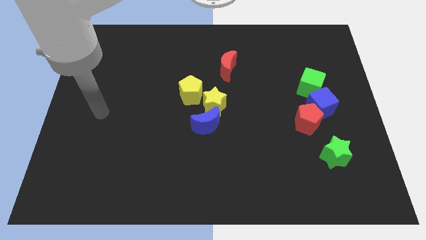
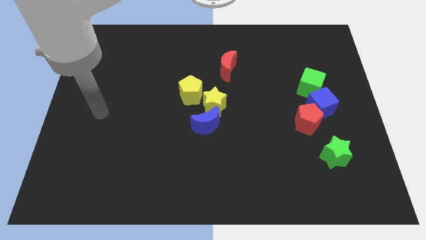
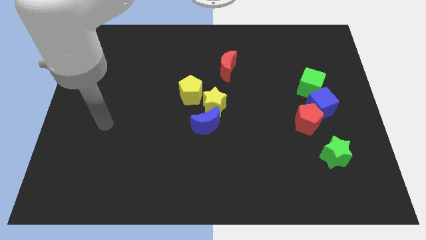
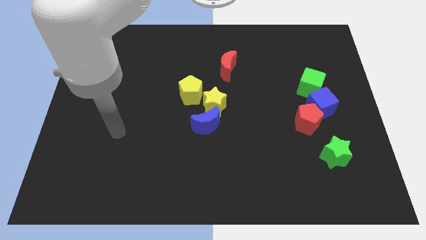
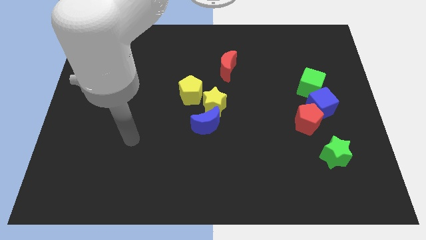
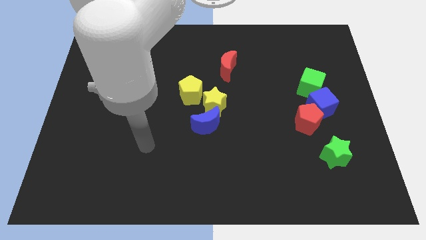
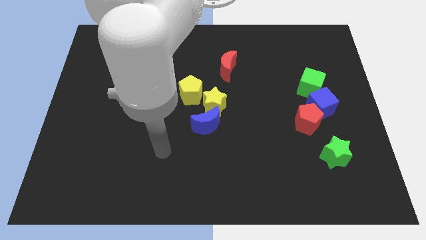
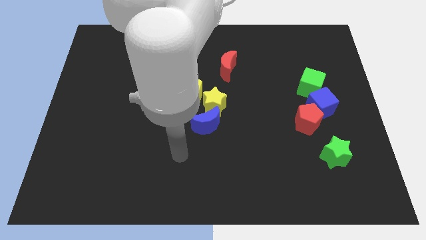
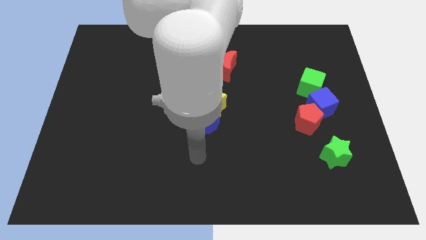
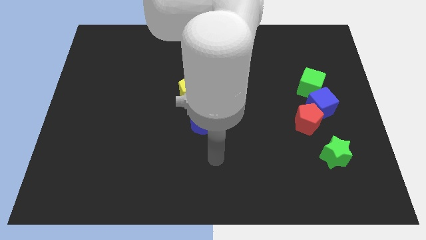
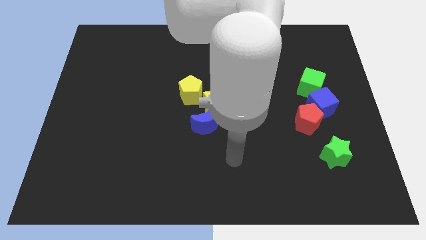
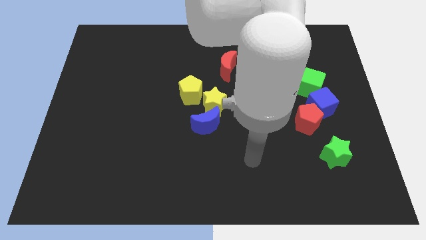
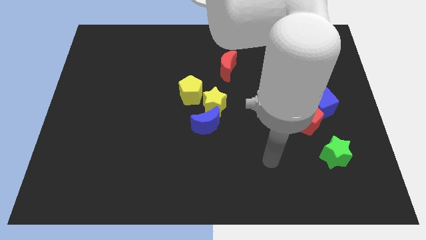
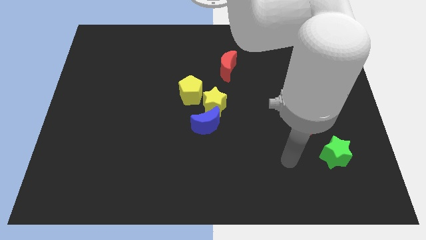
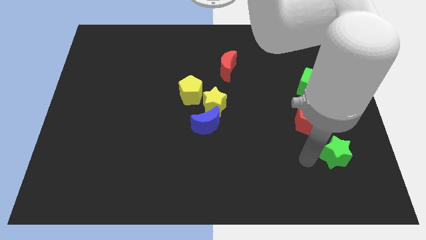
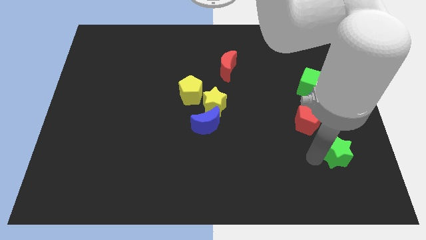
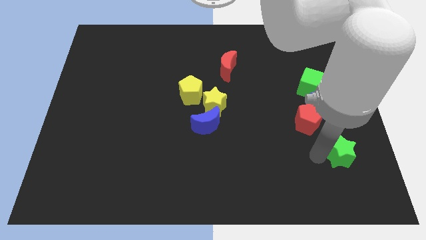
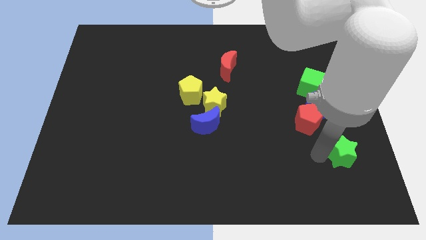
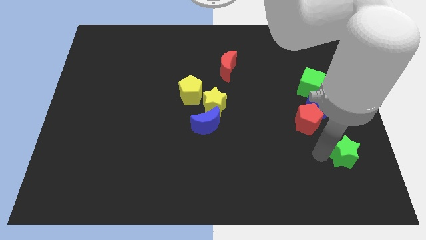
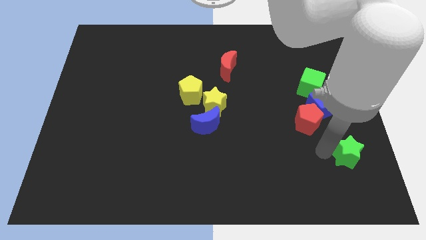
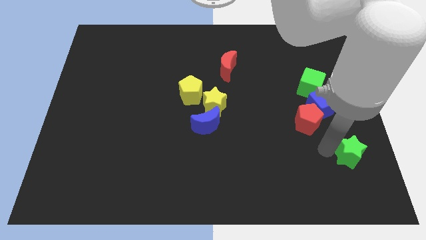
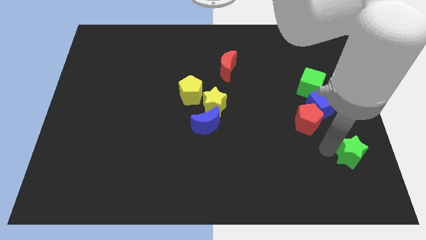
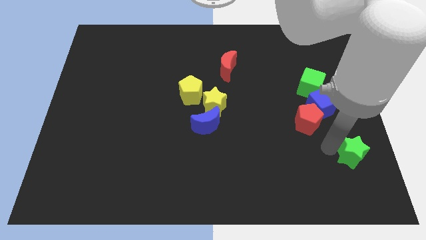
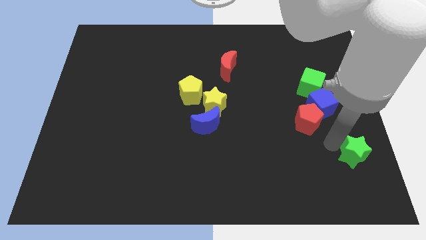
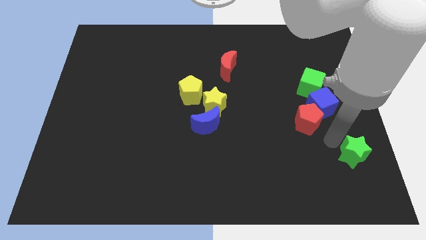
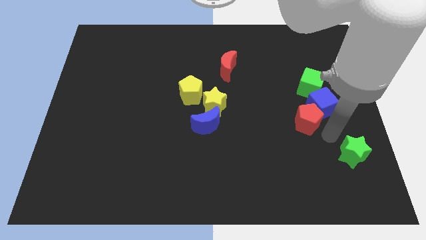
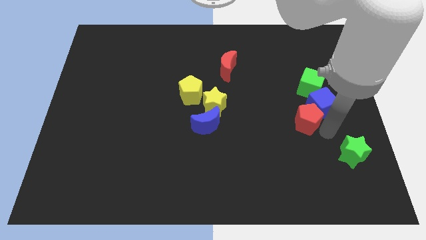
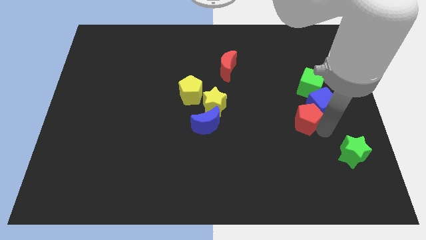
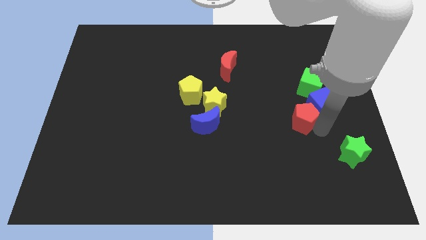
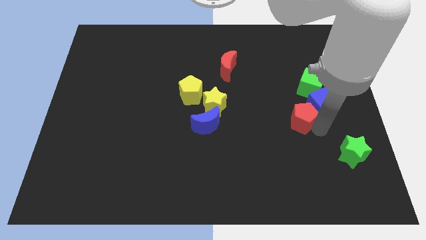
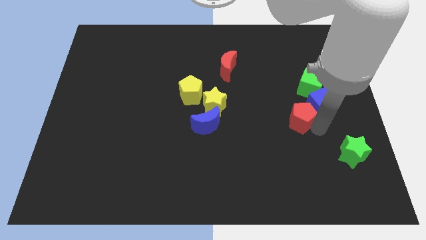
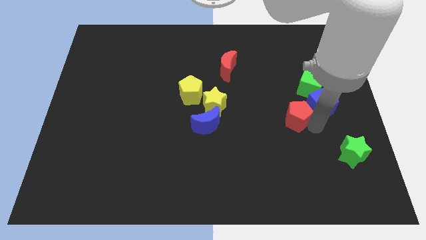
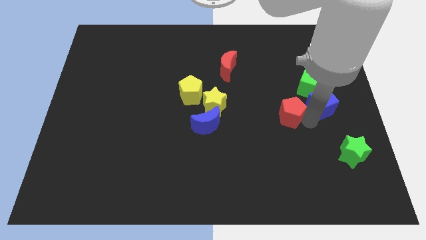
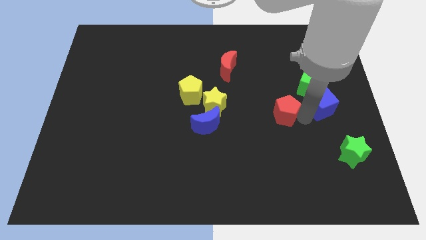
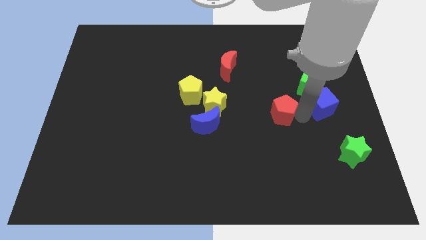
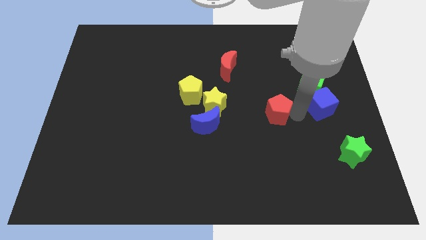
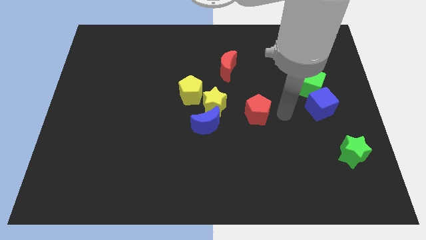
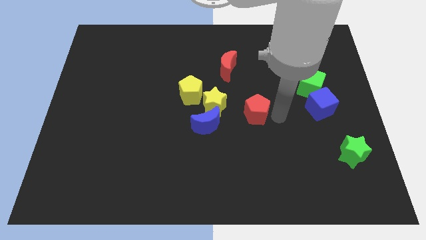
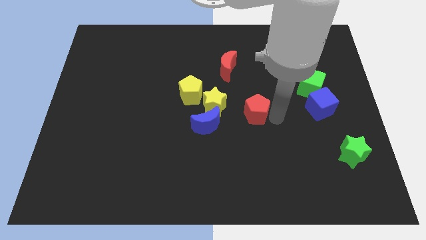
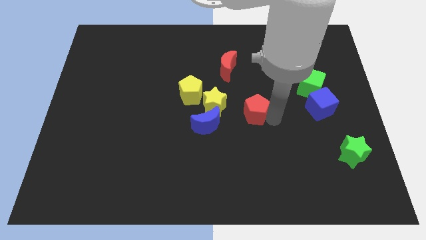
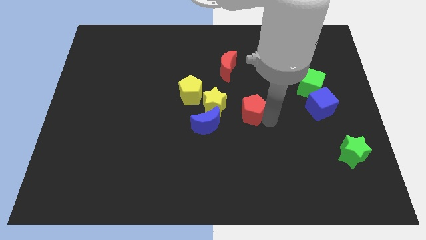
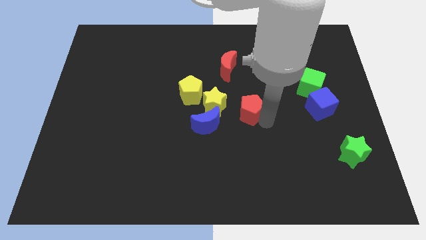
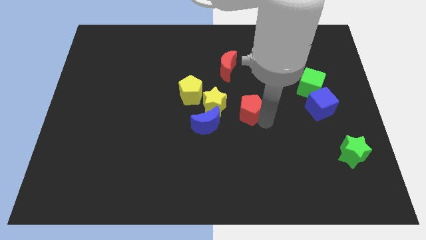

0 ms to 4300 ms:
move the red pentagon away from the green star

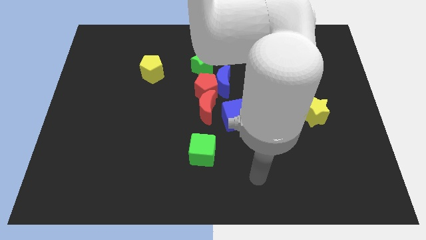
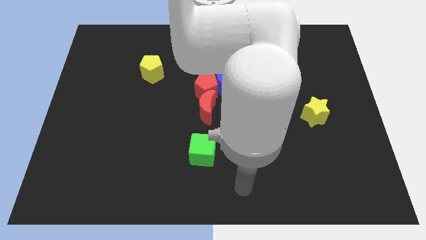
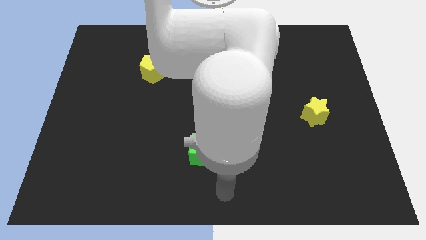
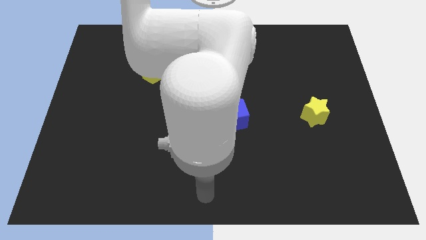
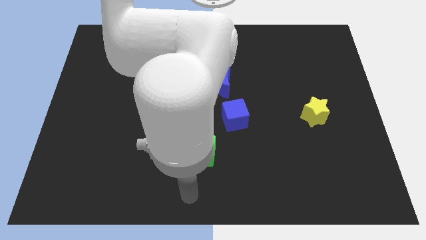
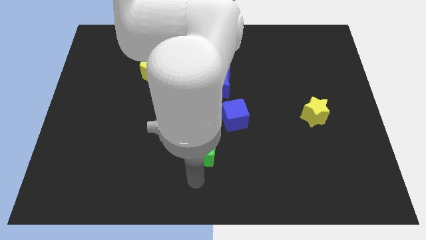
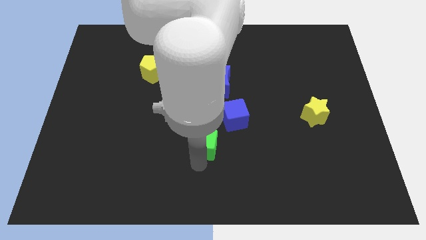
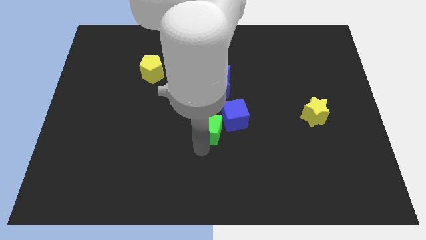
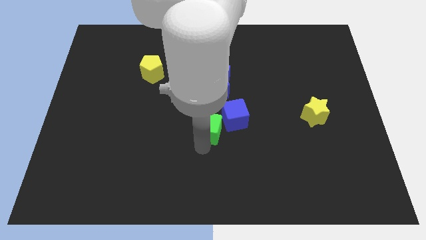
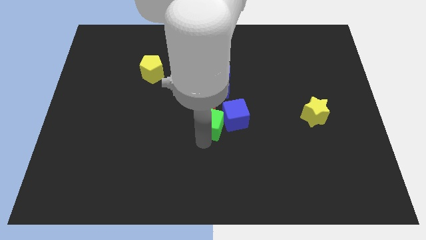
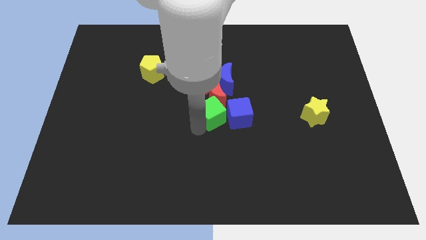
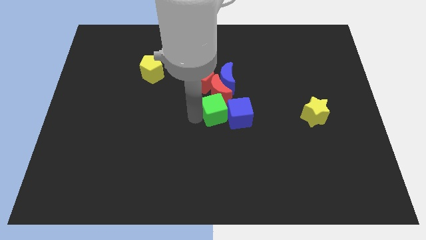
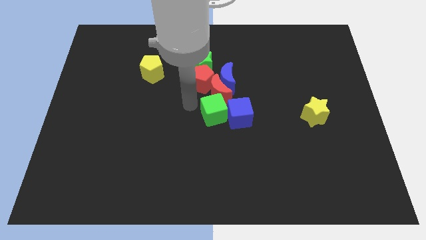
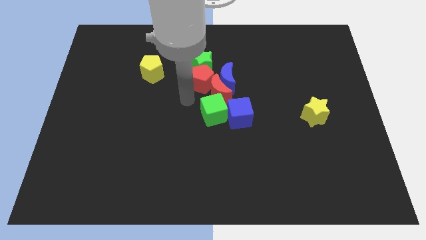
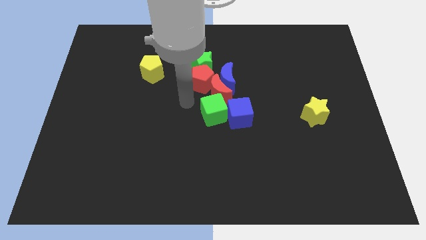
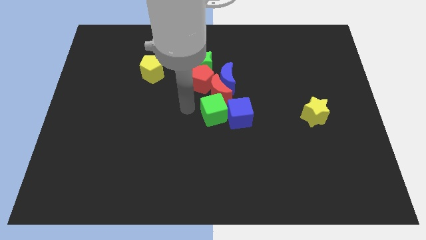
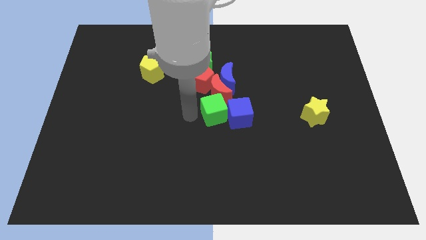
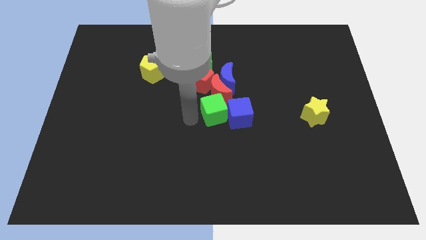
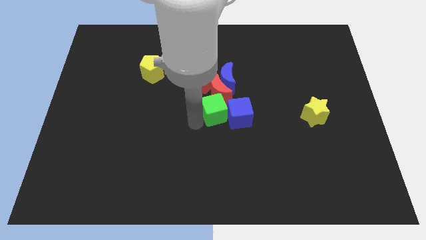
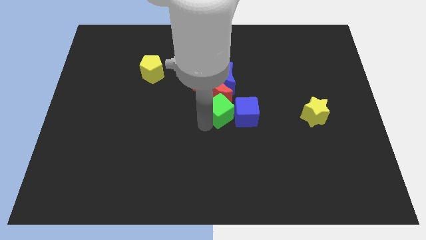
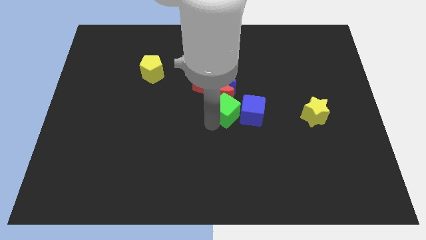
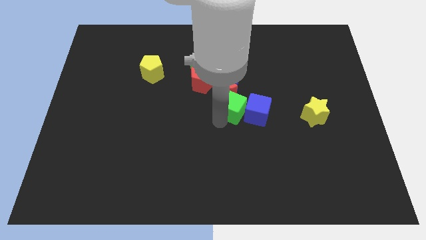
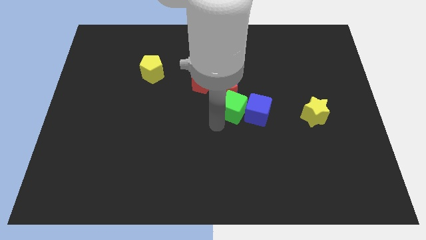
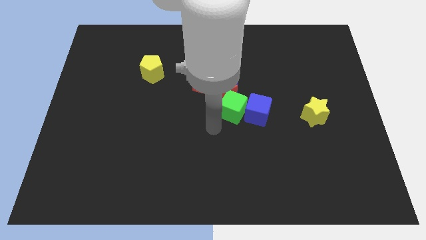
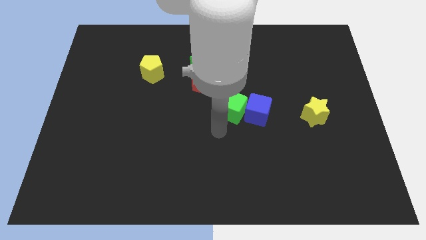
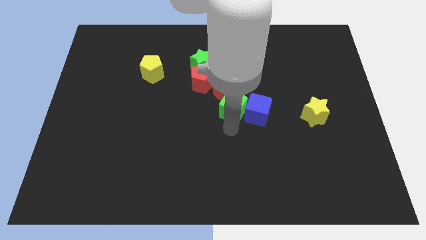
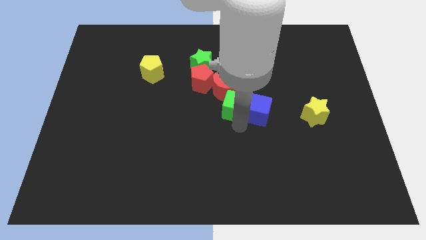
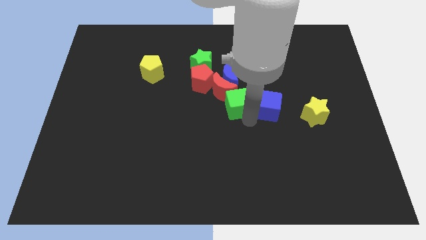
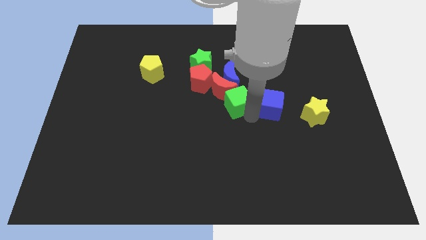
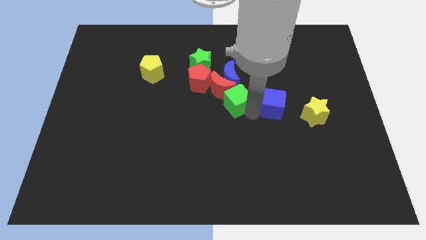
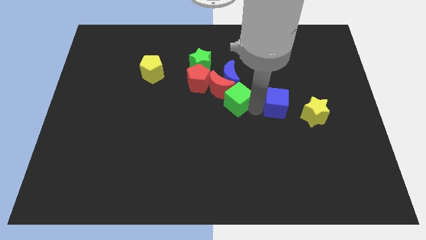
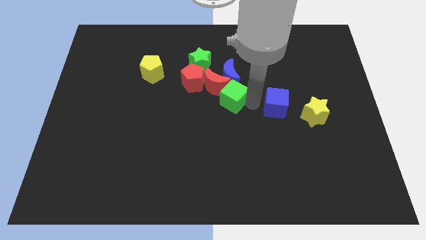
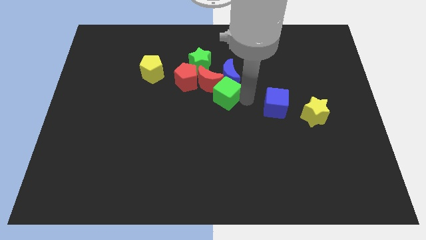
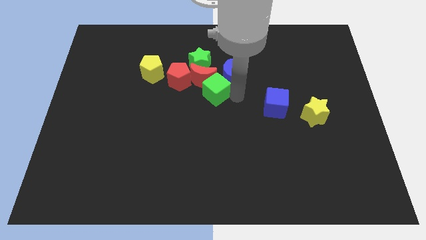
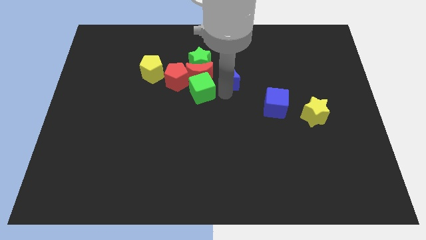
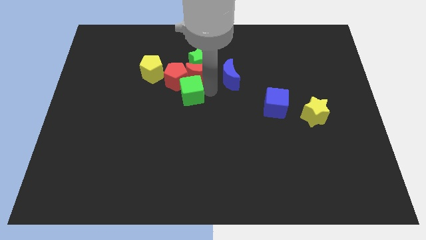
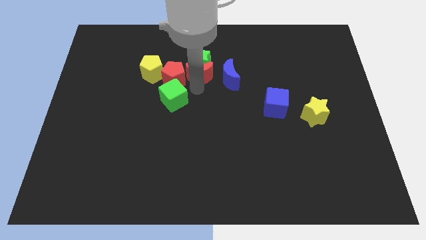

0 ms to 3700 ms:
push the green cube to the bottom of the red pentagon

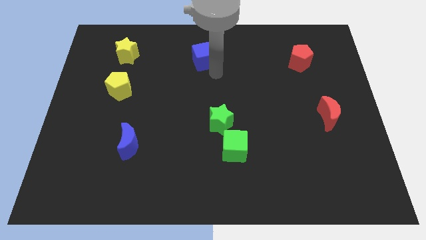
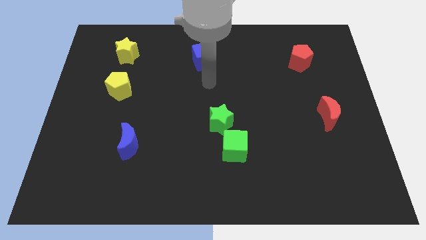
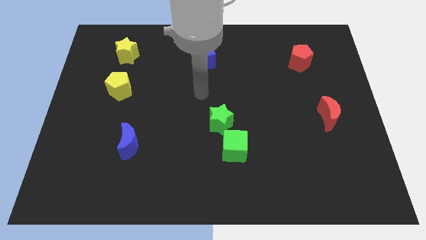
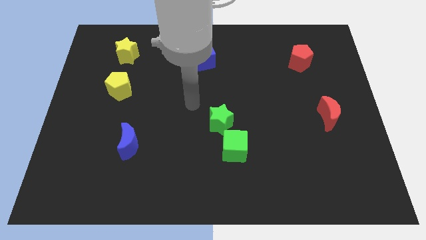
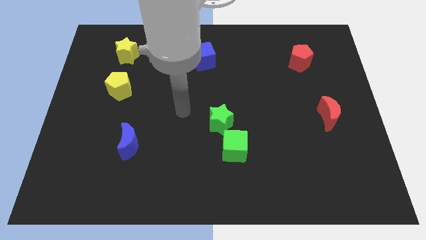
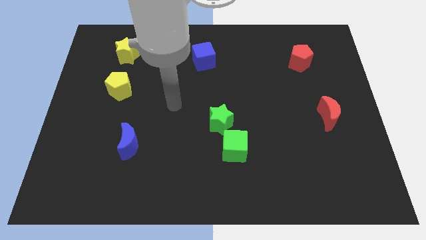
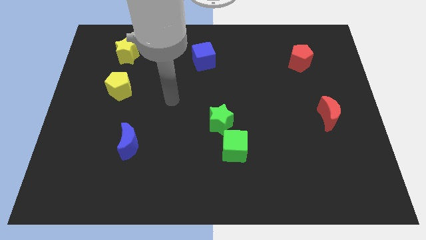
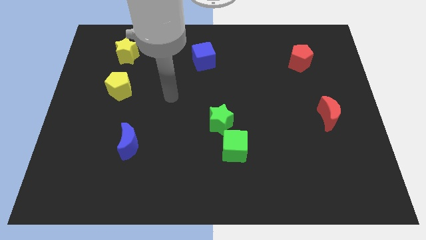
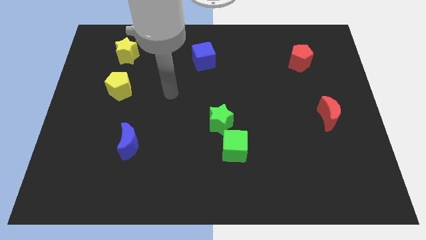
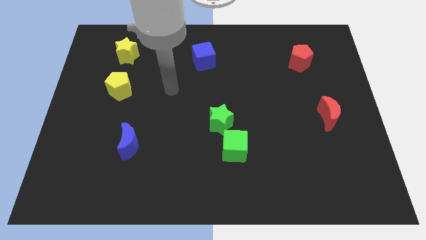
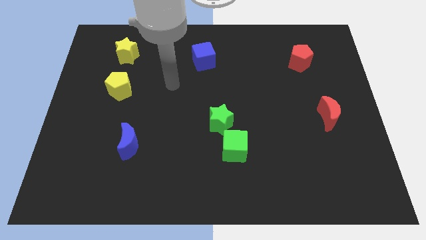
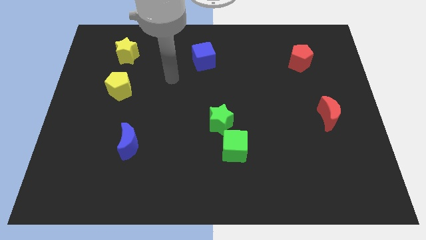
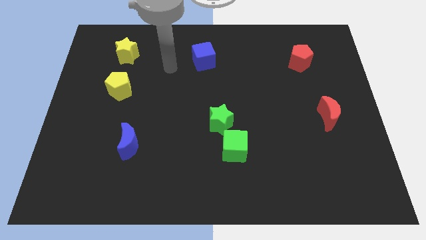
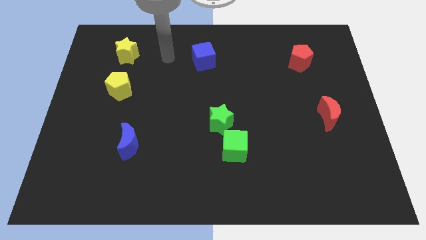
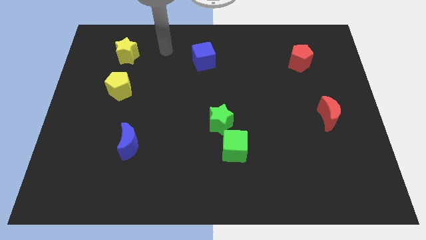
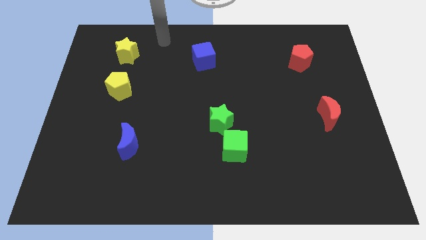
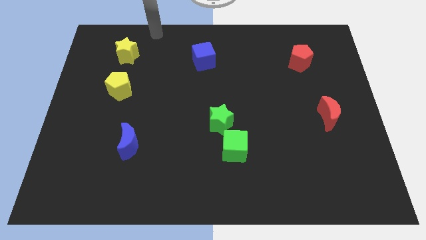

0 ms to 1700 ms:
move away from the blue cube
